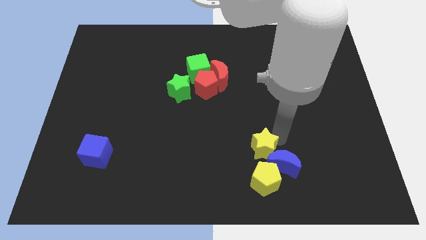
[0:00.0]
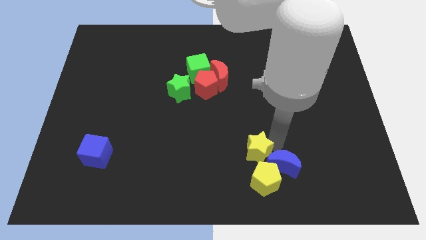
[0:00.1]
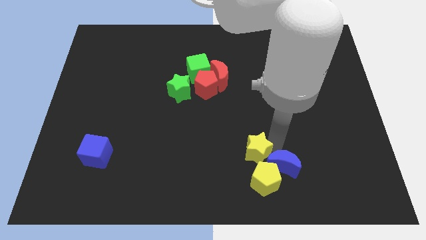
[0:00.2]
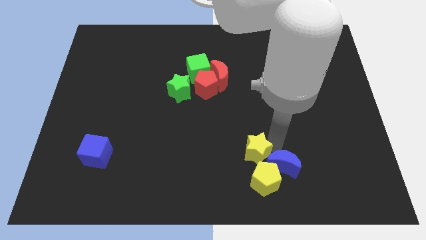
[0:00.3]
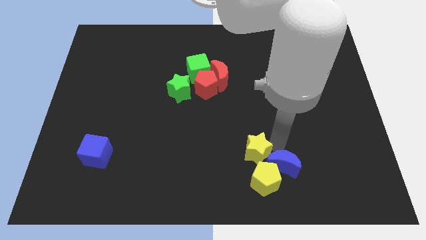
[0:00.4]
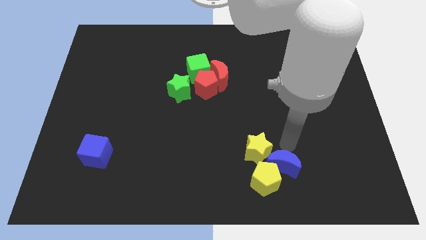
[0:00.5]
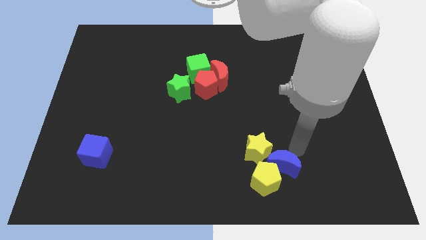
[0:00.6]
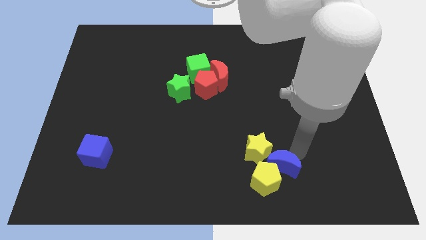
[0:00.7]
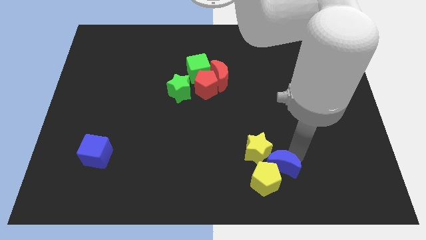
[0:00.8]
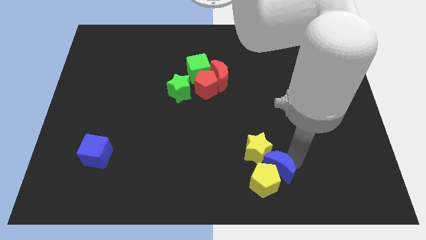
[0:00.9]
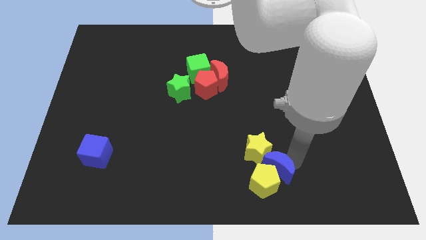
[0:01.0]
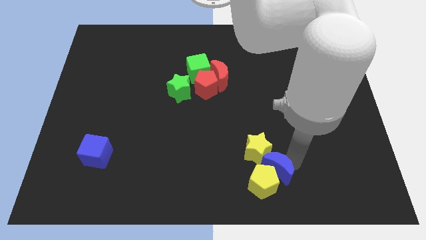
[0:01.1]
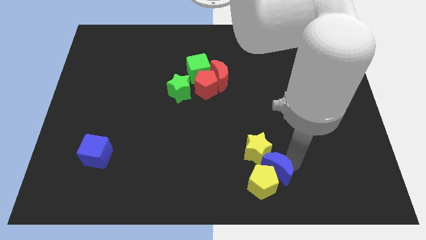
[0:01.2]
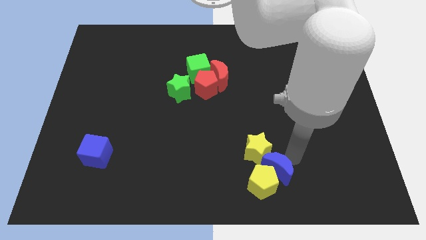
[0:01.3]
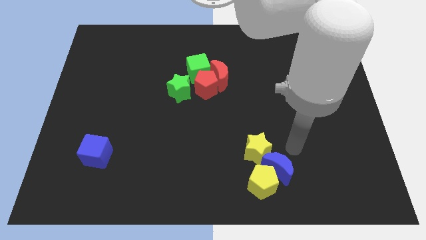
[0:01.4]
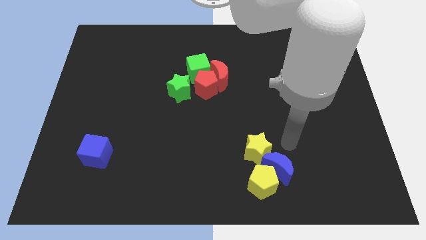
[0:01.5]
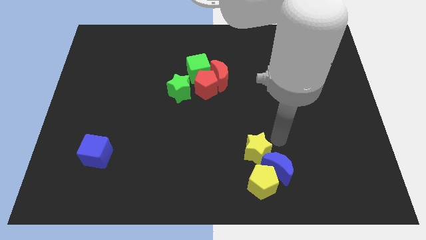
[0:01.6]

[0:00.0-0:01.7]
adjust the yellow star and the blue moon

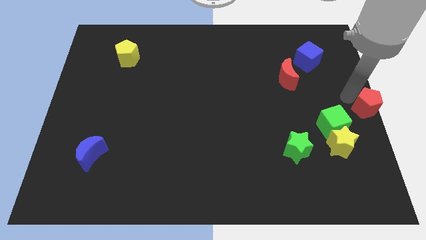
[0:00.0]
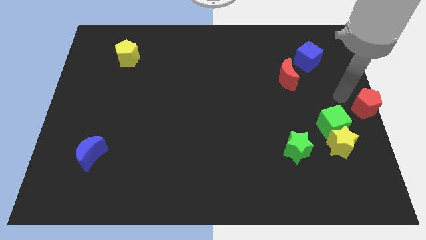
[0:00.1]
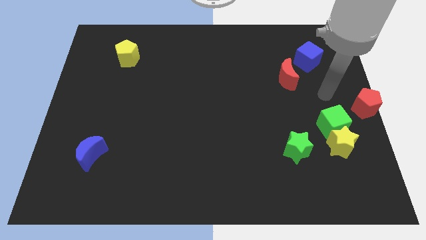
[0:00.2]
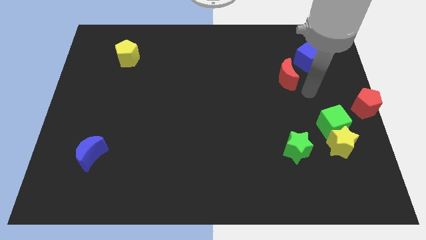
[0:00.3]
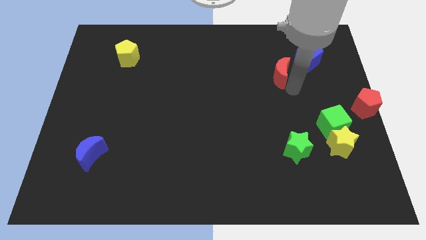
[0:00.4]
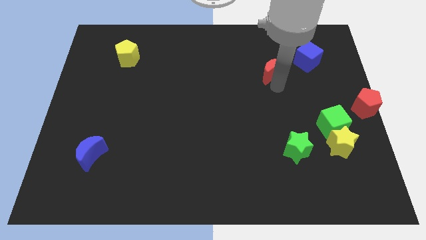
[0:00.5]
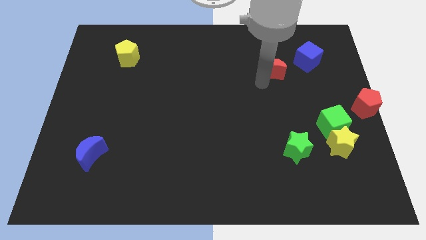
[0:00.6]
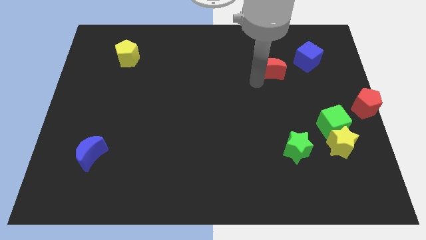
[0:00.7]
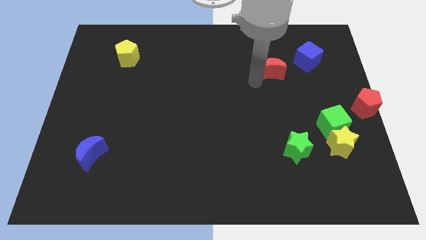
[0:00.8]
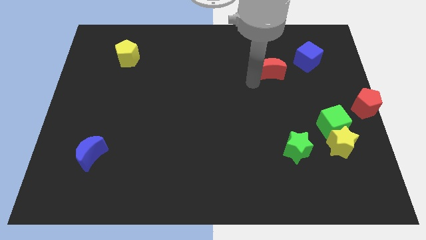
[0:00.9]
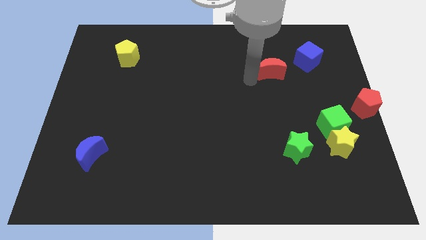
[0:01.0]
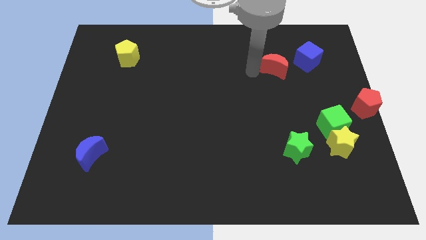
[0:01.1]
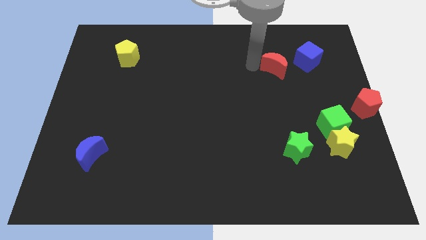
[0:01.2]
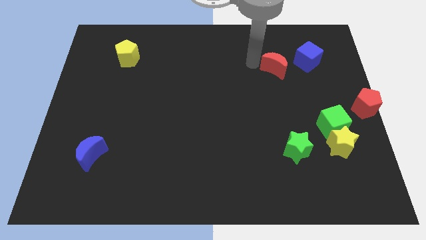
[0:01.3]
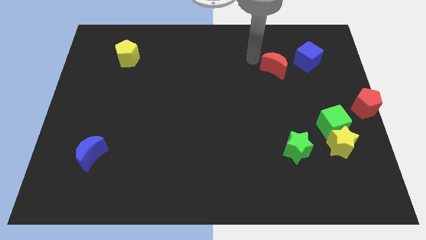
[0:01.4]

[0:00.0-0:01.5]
separate the red moon from the blue cube

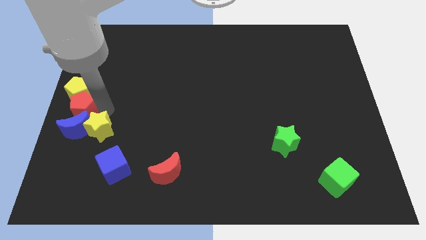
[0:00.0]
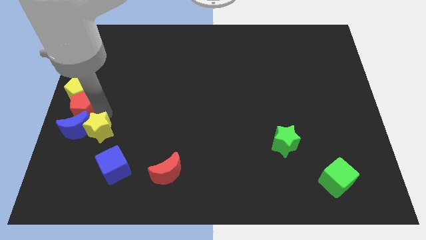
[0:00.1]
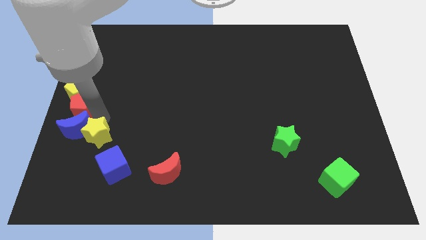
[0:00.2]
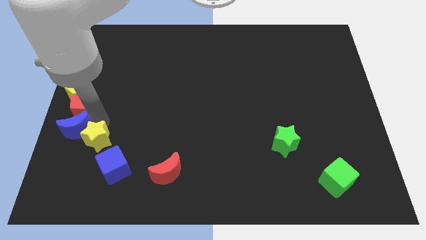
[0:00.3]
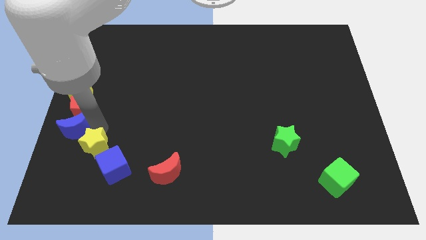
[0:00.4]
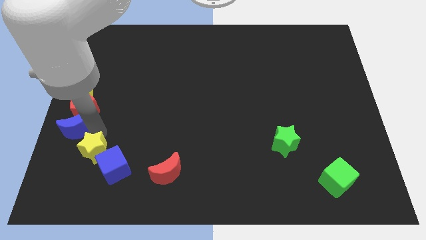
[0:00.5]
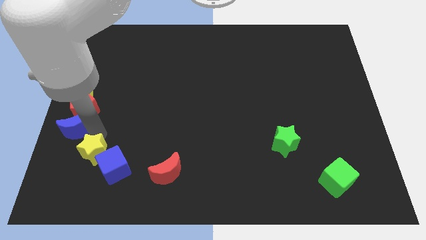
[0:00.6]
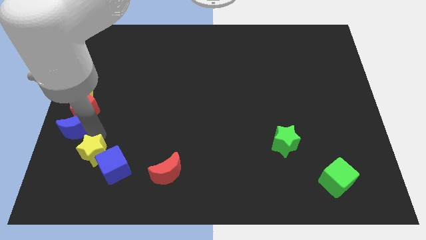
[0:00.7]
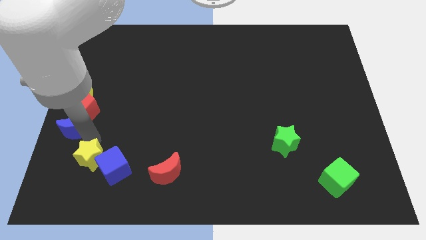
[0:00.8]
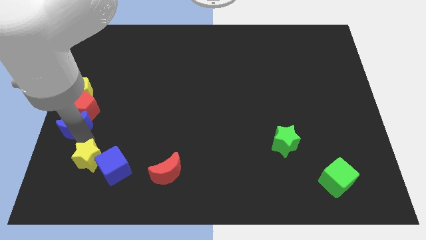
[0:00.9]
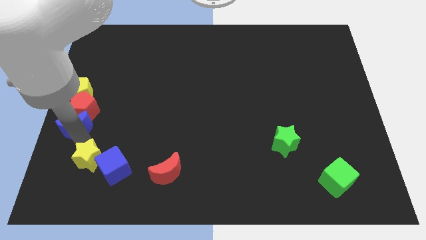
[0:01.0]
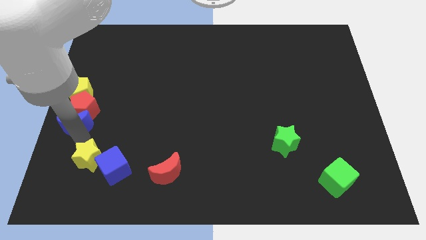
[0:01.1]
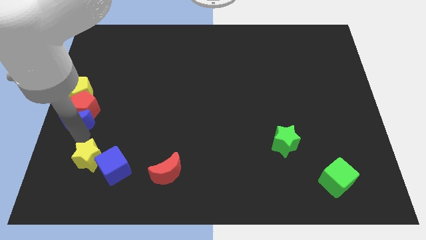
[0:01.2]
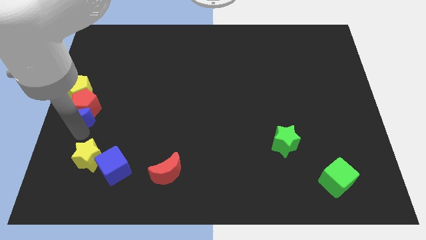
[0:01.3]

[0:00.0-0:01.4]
put the yellow star and blue cube together

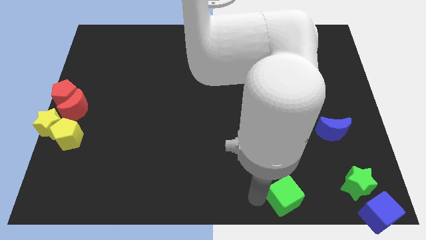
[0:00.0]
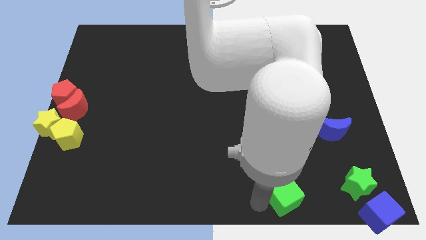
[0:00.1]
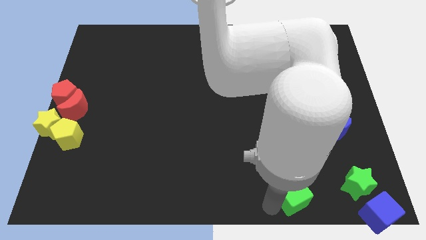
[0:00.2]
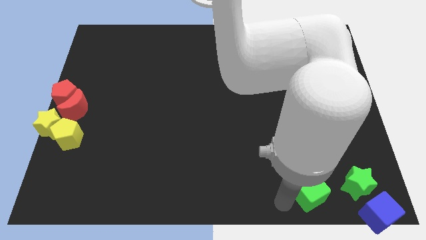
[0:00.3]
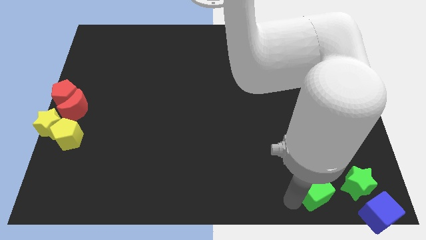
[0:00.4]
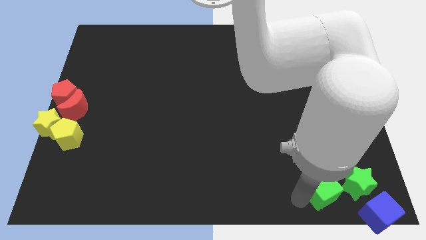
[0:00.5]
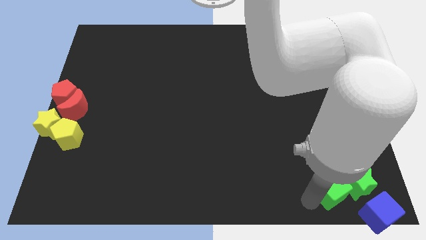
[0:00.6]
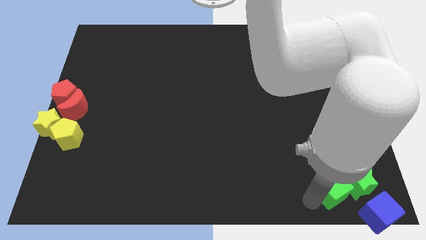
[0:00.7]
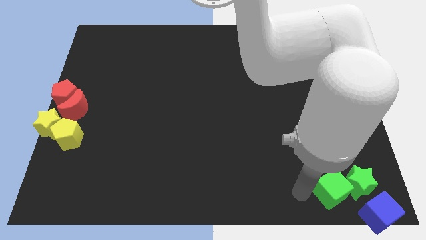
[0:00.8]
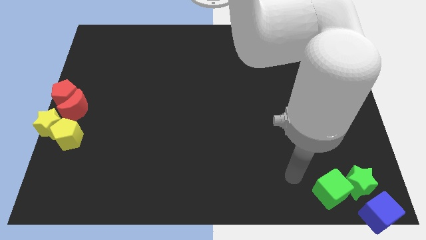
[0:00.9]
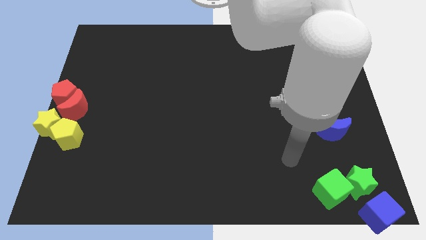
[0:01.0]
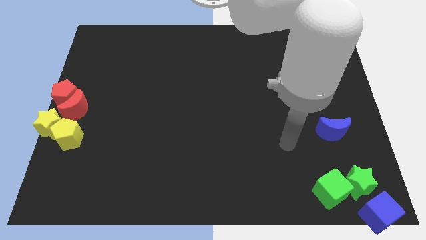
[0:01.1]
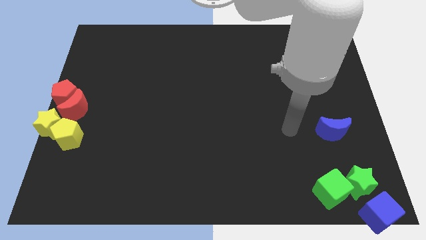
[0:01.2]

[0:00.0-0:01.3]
push the green cube into the green star

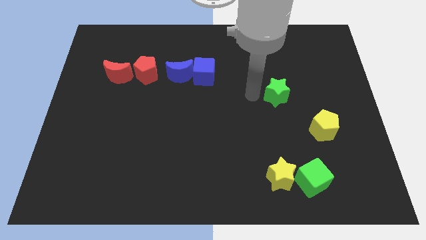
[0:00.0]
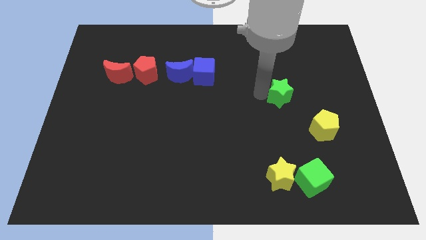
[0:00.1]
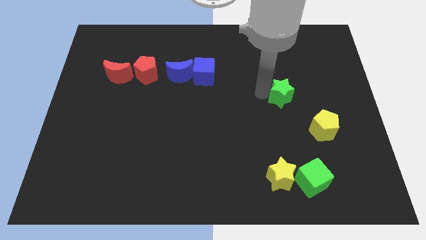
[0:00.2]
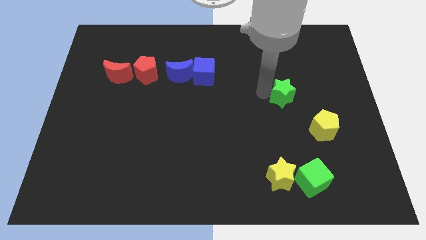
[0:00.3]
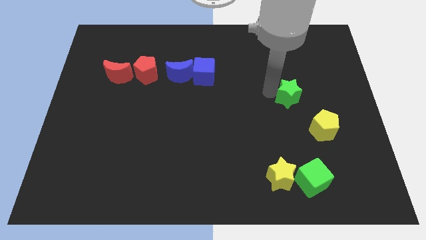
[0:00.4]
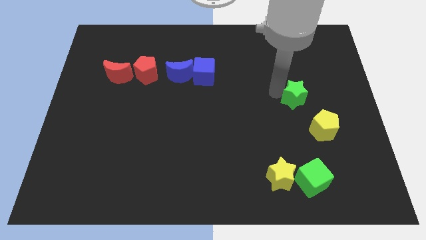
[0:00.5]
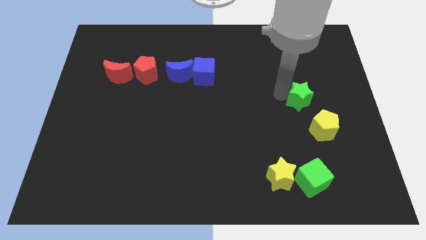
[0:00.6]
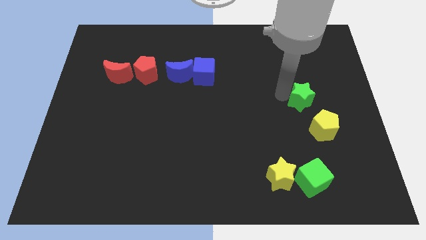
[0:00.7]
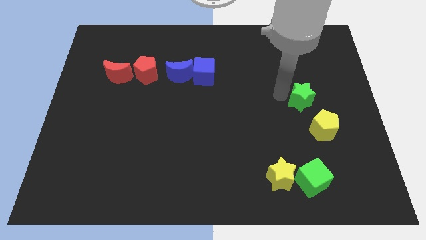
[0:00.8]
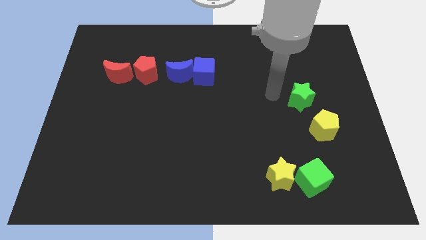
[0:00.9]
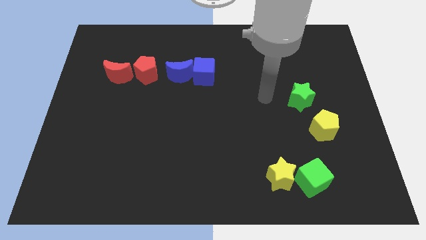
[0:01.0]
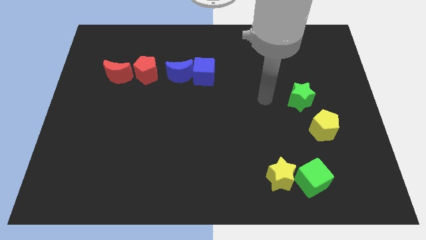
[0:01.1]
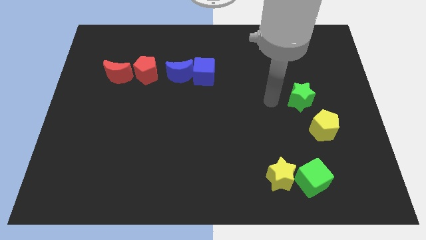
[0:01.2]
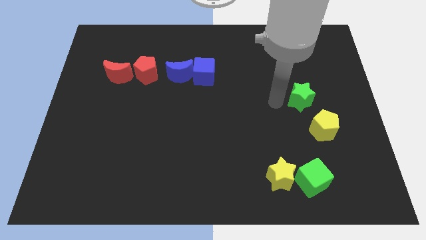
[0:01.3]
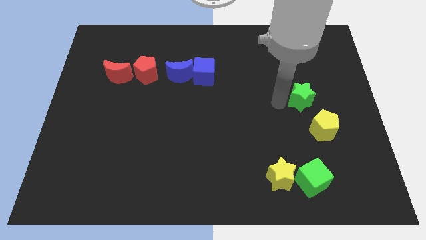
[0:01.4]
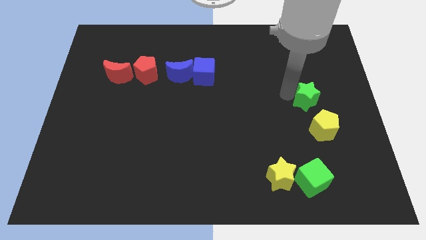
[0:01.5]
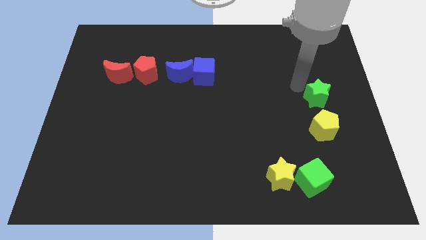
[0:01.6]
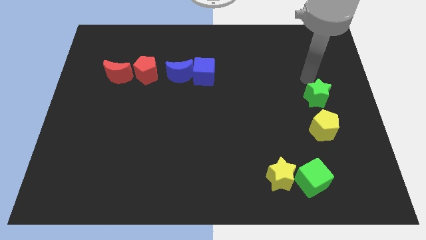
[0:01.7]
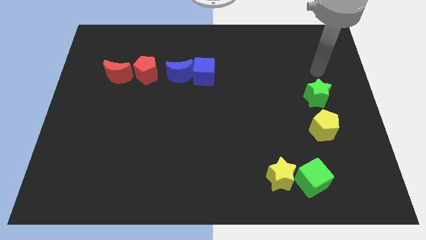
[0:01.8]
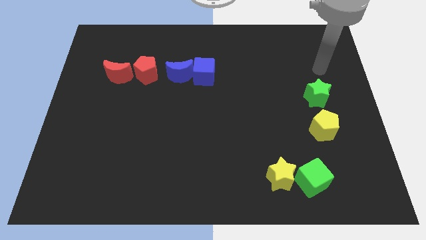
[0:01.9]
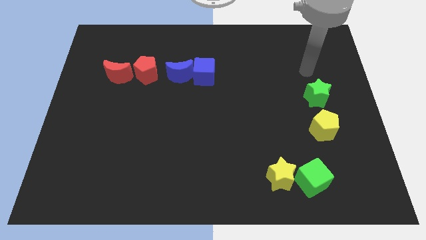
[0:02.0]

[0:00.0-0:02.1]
place the green star above the yellow pentagon

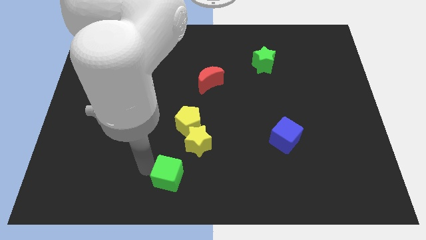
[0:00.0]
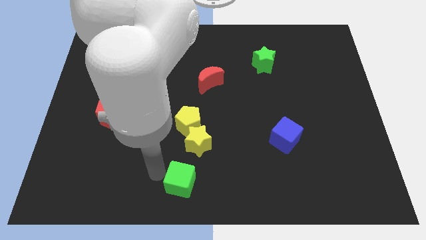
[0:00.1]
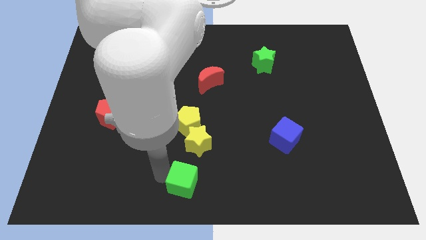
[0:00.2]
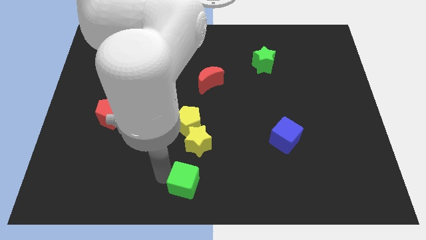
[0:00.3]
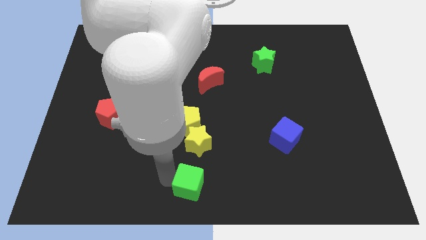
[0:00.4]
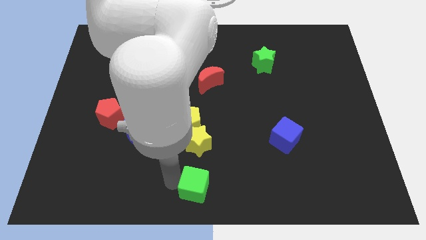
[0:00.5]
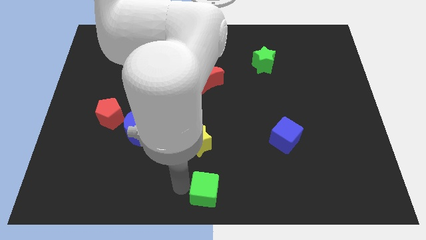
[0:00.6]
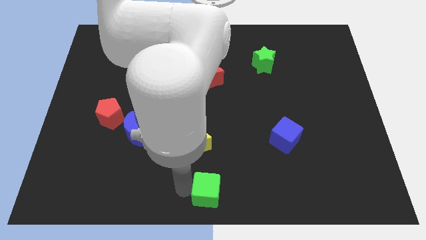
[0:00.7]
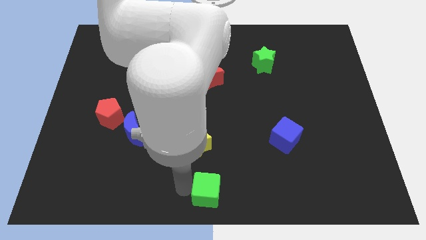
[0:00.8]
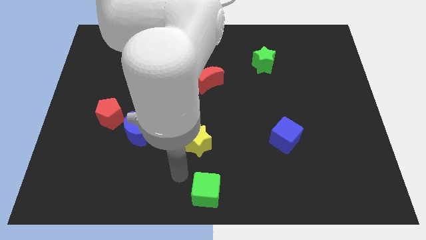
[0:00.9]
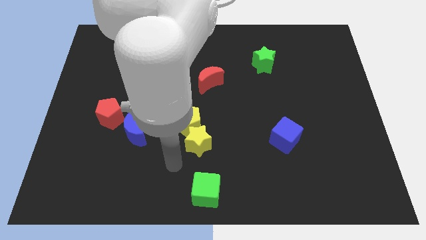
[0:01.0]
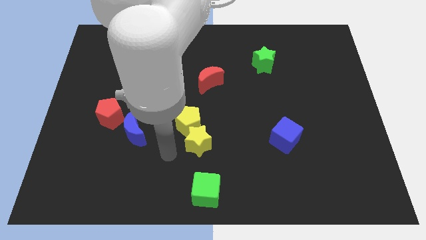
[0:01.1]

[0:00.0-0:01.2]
place green cube to the bottom center
